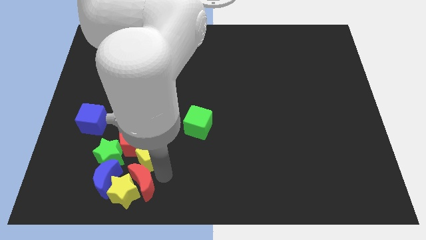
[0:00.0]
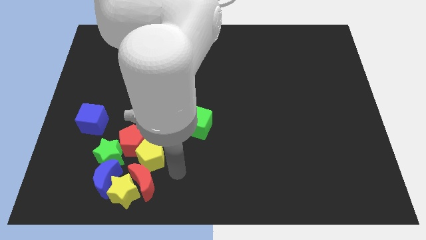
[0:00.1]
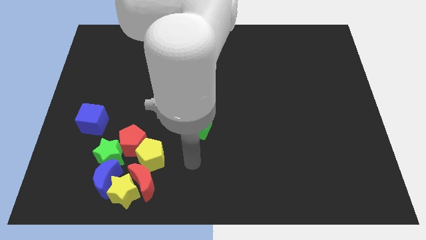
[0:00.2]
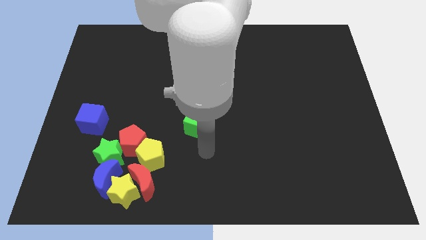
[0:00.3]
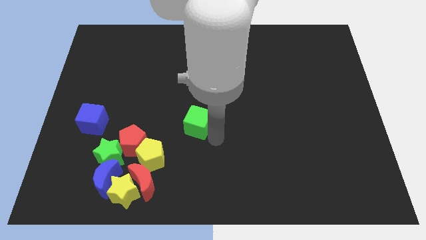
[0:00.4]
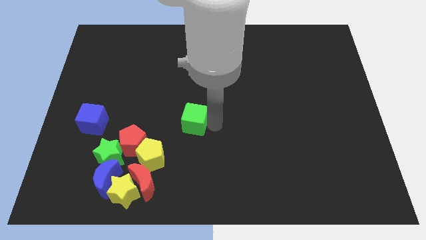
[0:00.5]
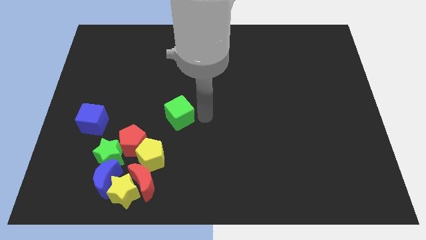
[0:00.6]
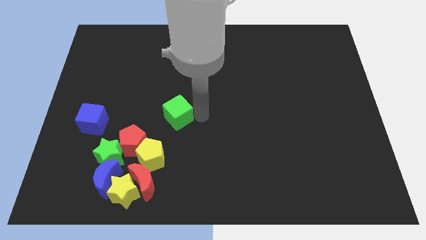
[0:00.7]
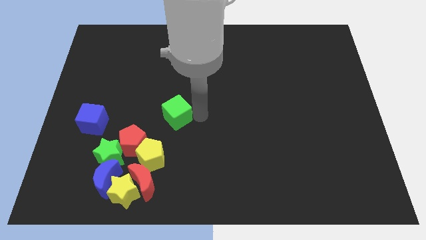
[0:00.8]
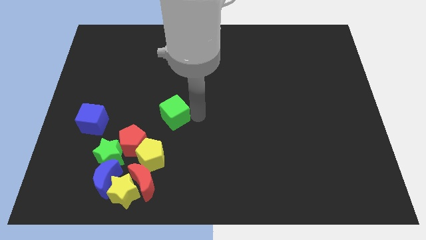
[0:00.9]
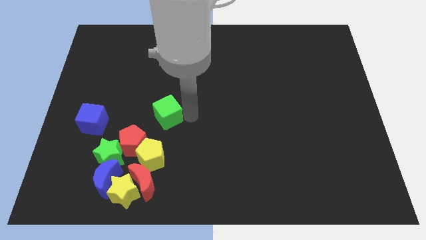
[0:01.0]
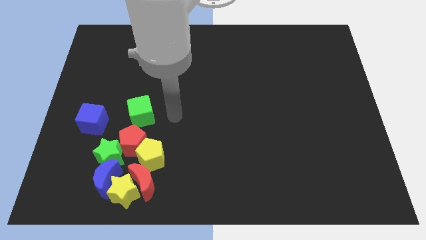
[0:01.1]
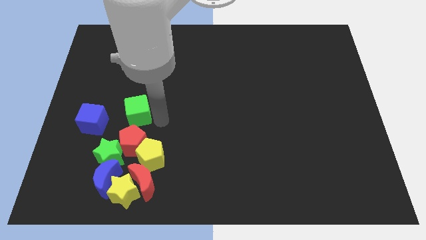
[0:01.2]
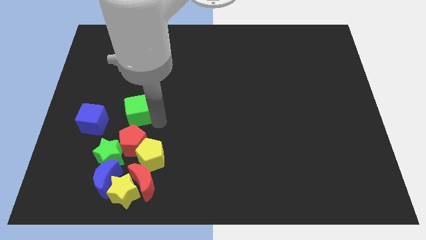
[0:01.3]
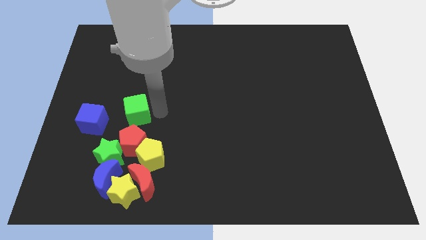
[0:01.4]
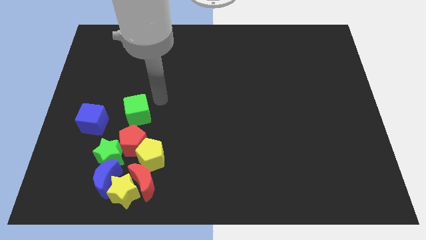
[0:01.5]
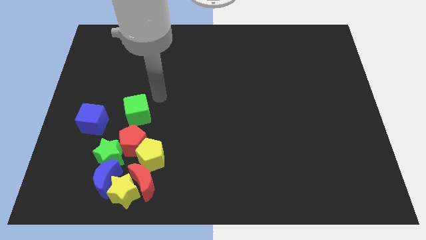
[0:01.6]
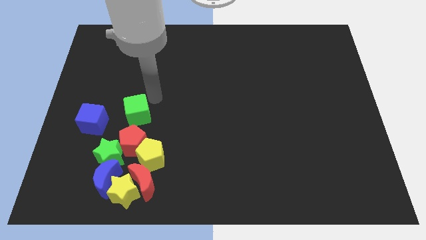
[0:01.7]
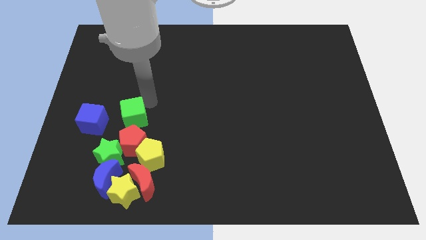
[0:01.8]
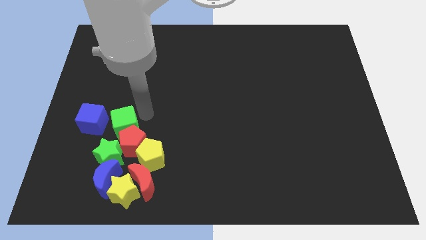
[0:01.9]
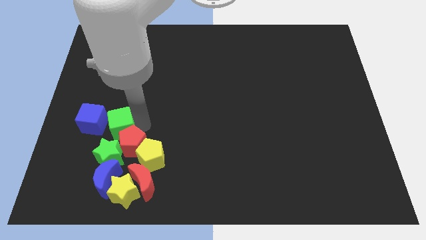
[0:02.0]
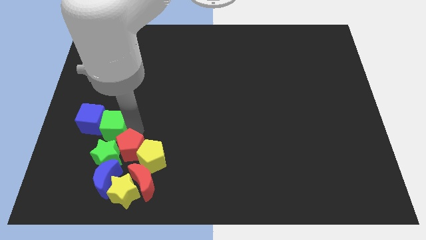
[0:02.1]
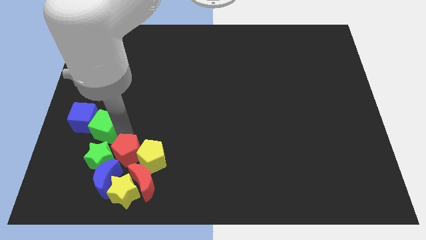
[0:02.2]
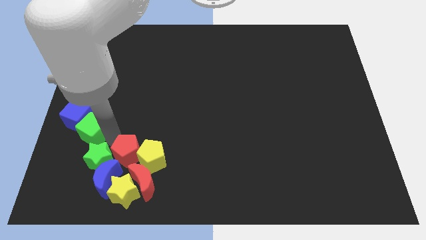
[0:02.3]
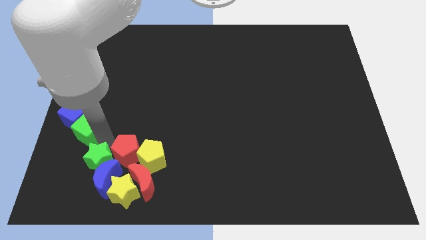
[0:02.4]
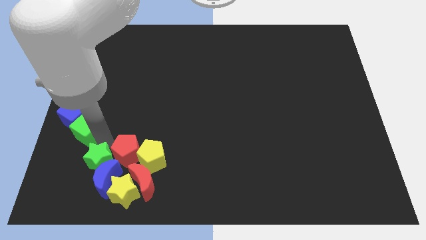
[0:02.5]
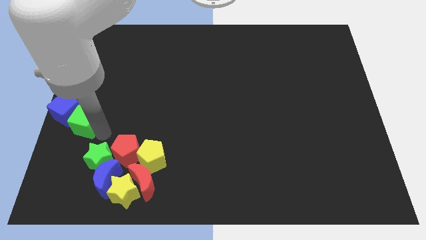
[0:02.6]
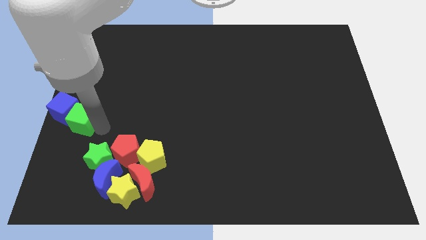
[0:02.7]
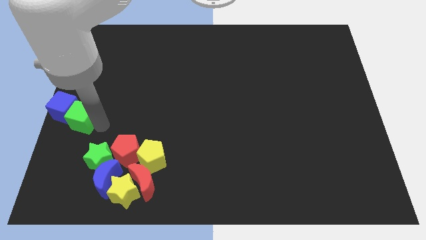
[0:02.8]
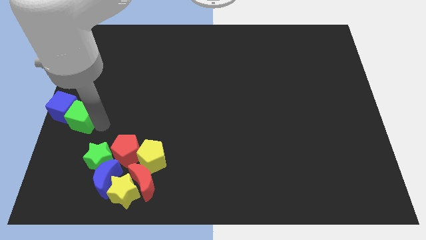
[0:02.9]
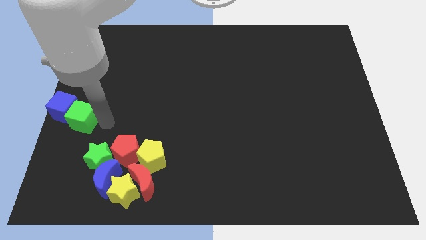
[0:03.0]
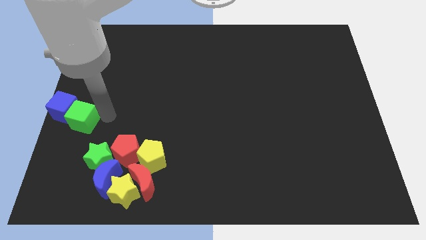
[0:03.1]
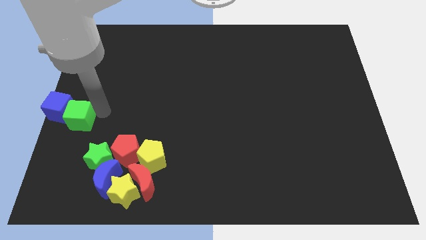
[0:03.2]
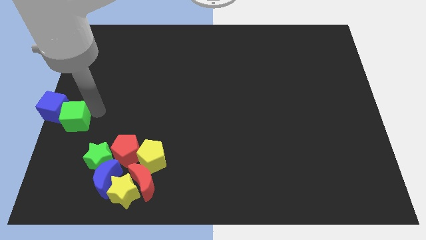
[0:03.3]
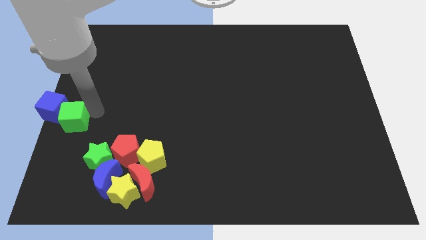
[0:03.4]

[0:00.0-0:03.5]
place the cubes to the left center of the board

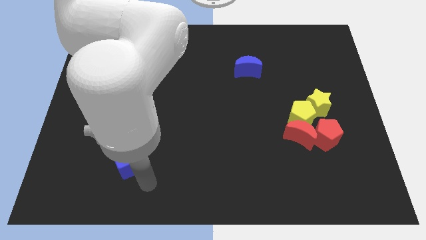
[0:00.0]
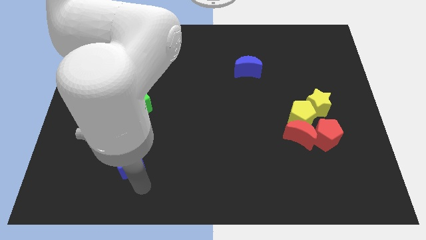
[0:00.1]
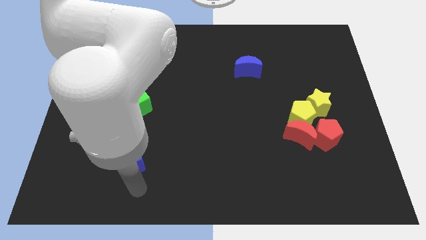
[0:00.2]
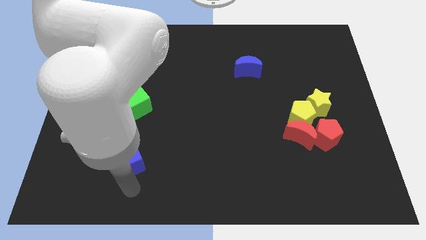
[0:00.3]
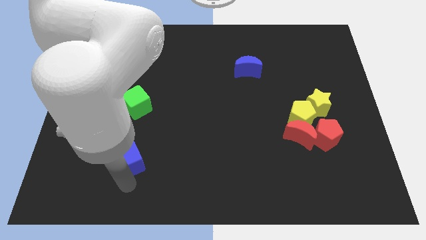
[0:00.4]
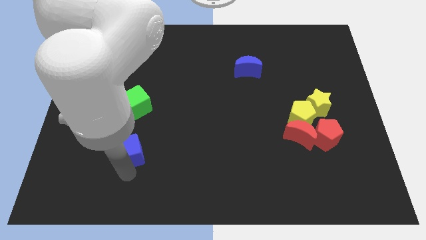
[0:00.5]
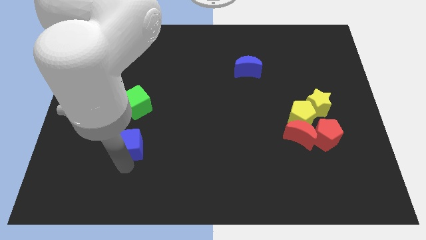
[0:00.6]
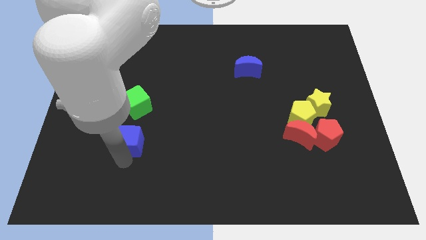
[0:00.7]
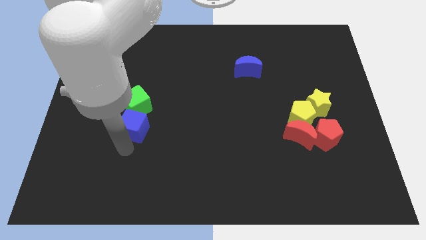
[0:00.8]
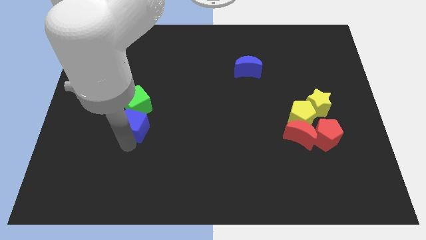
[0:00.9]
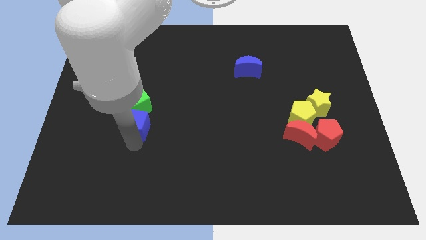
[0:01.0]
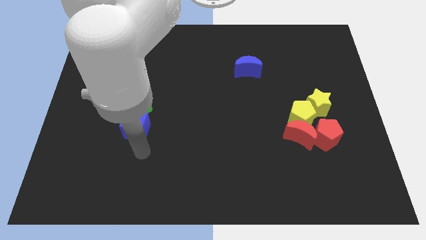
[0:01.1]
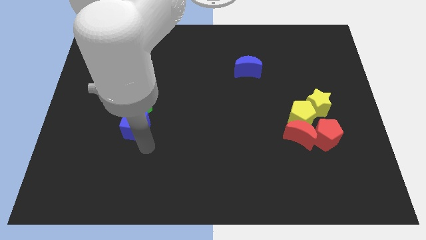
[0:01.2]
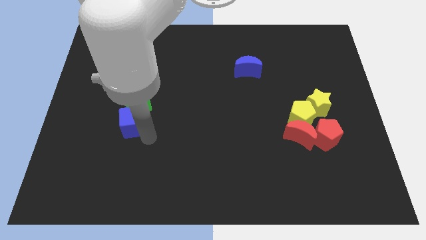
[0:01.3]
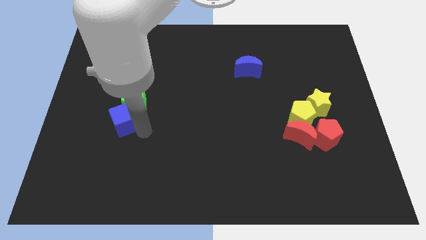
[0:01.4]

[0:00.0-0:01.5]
drag the blue cube into the green cube

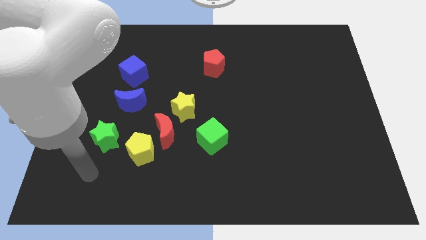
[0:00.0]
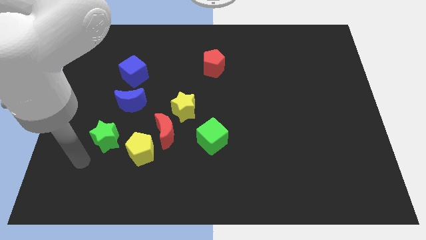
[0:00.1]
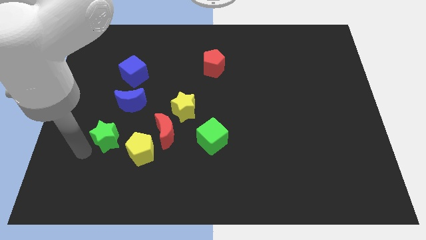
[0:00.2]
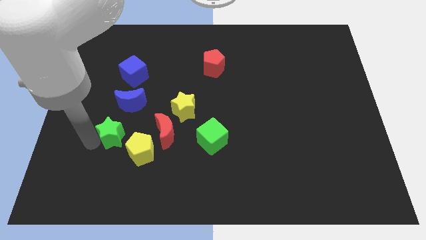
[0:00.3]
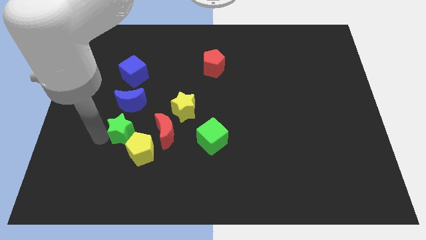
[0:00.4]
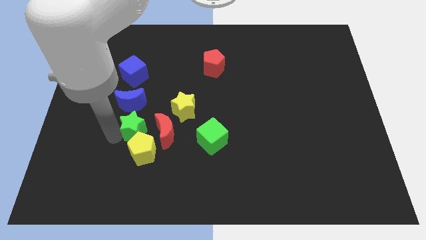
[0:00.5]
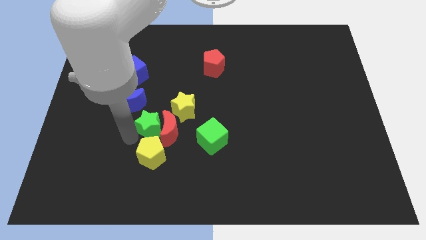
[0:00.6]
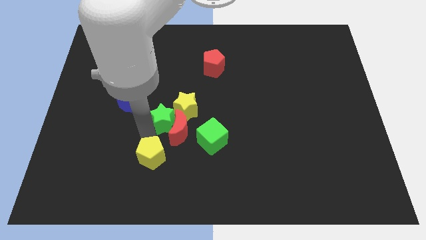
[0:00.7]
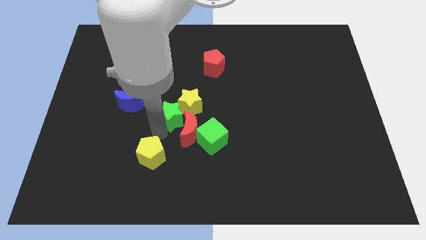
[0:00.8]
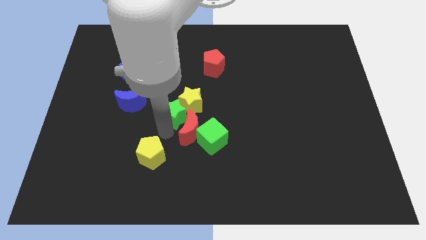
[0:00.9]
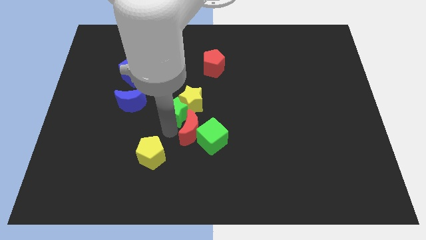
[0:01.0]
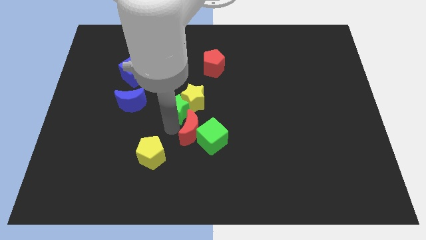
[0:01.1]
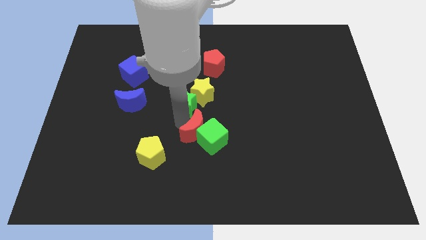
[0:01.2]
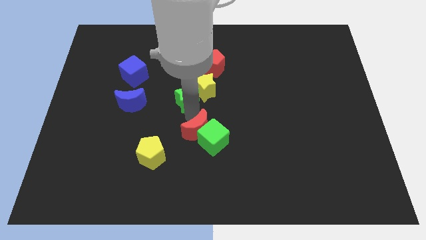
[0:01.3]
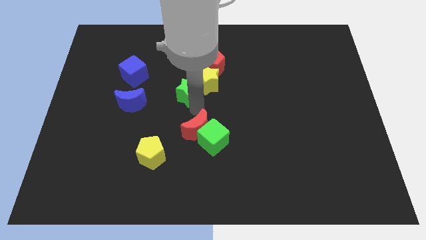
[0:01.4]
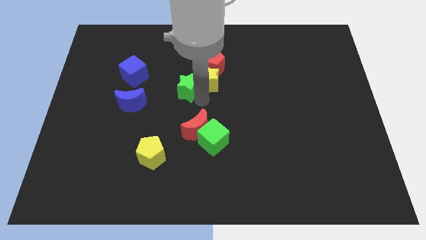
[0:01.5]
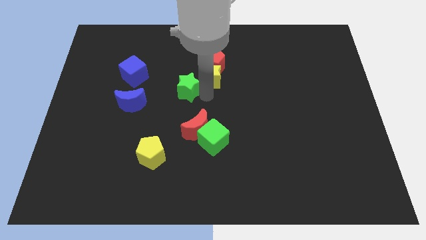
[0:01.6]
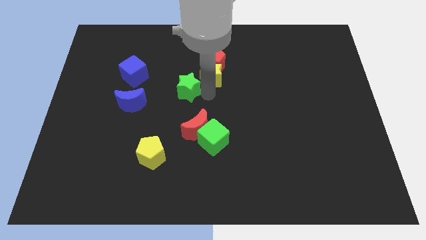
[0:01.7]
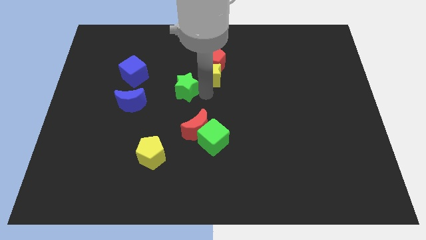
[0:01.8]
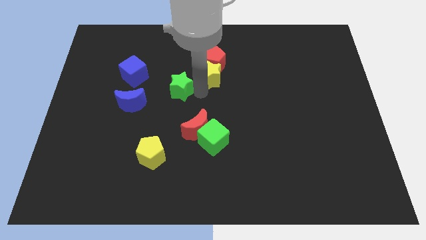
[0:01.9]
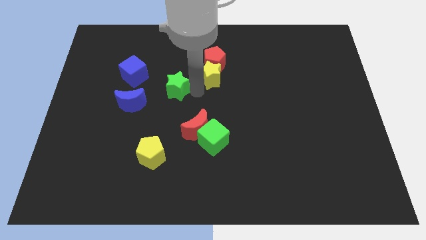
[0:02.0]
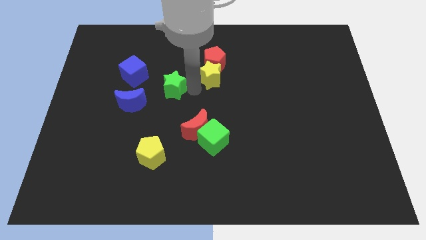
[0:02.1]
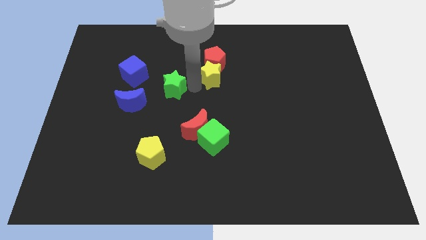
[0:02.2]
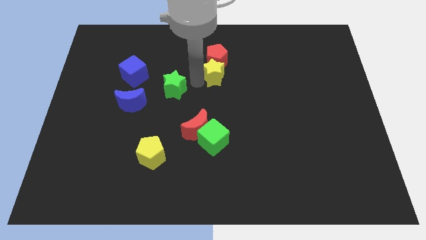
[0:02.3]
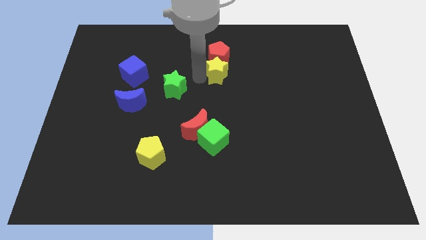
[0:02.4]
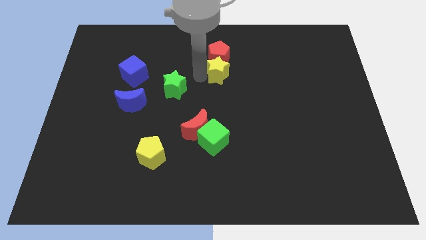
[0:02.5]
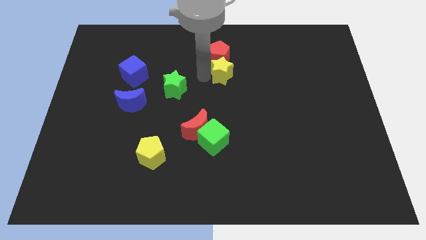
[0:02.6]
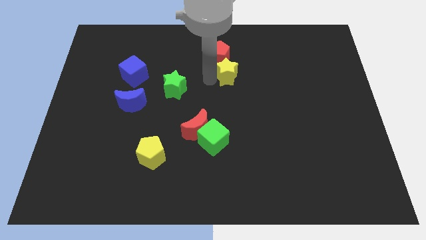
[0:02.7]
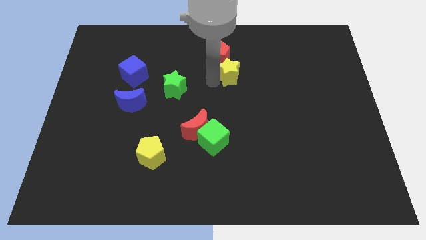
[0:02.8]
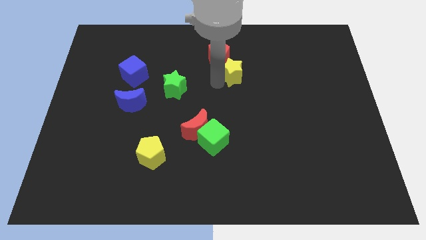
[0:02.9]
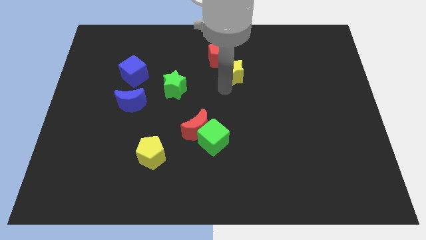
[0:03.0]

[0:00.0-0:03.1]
place the green star in between the yellow star and blue moon

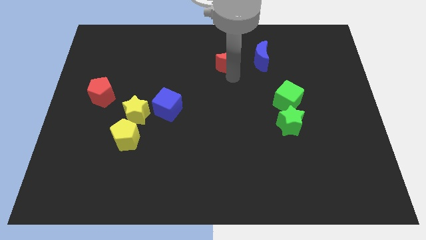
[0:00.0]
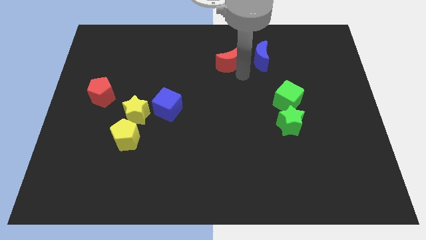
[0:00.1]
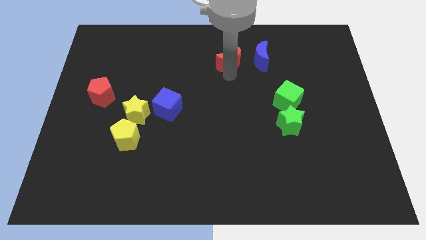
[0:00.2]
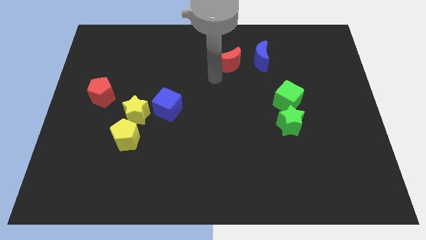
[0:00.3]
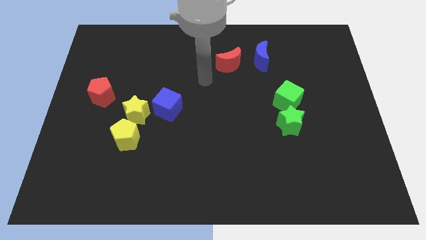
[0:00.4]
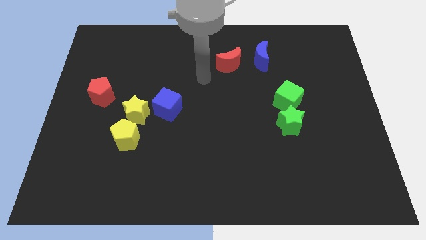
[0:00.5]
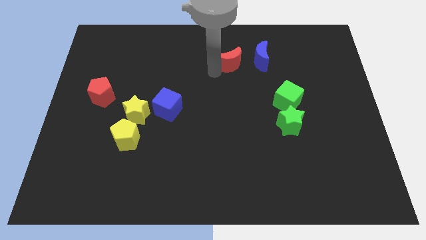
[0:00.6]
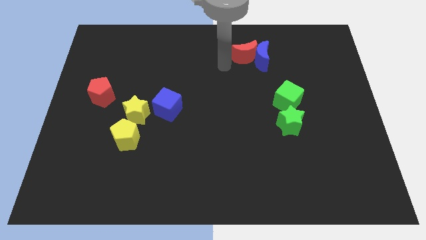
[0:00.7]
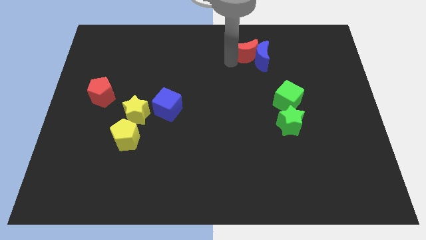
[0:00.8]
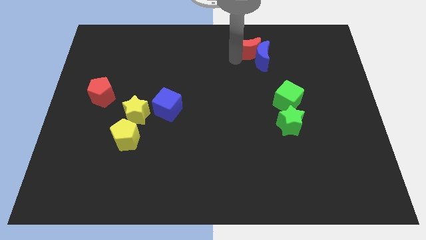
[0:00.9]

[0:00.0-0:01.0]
push the blue red crescent into blue crescent

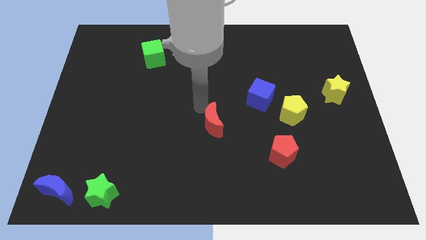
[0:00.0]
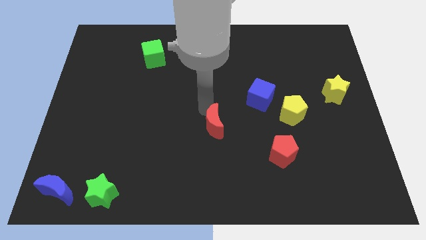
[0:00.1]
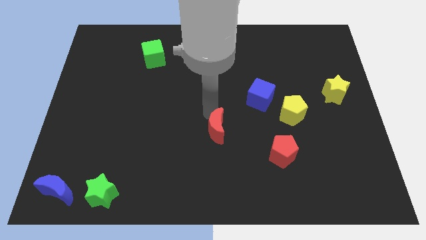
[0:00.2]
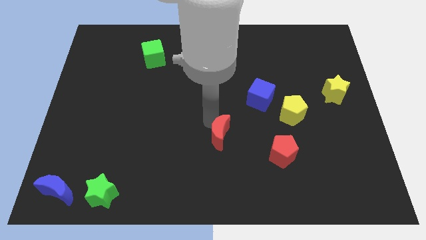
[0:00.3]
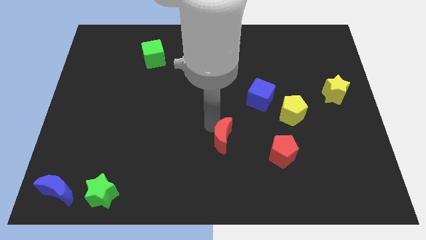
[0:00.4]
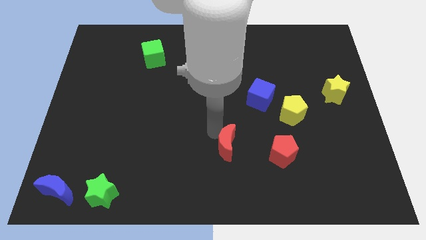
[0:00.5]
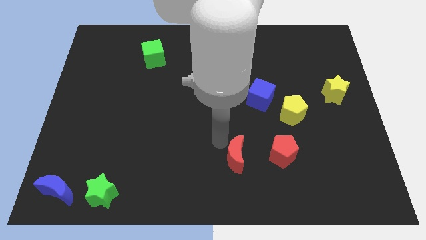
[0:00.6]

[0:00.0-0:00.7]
push the red moon to the left side of the red pentagon
